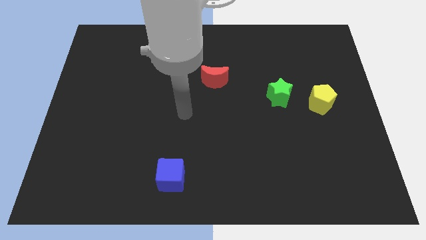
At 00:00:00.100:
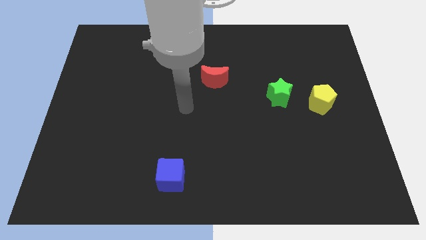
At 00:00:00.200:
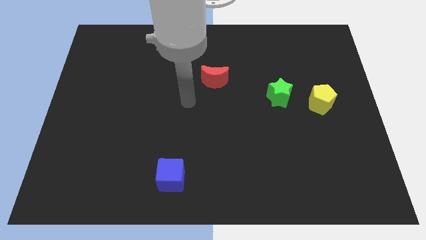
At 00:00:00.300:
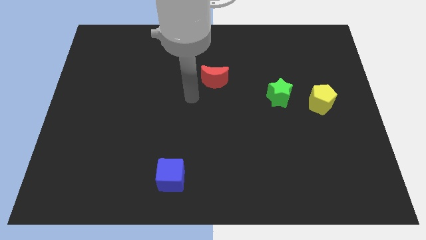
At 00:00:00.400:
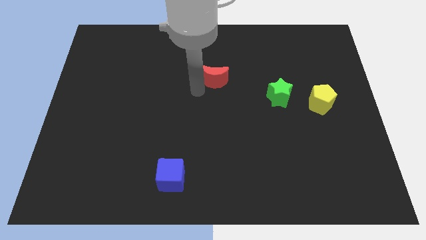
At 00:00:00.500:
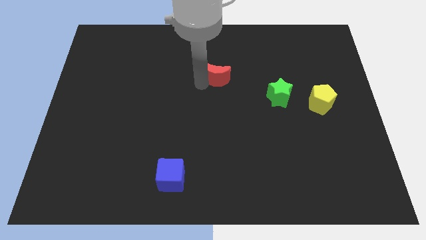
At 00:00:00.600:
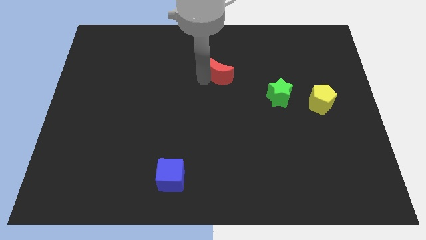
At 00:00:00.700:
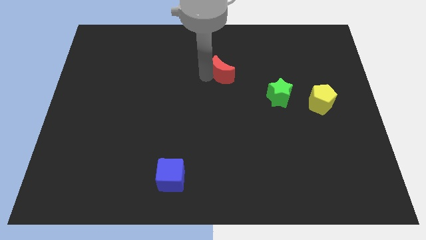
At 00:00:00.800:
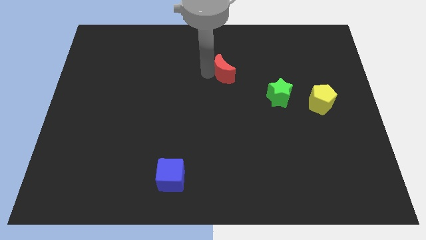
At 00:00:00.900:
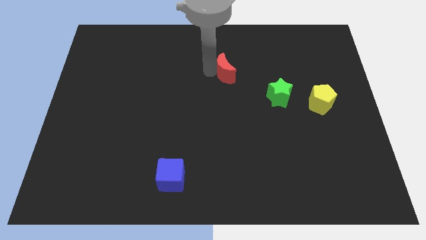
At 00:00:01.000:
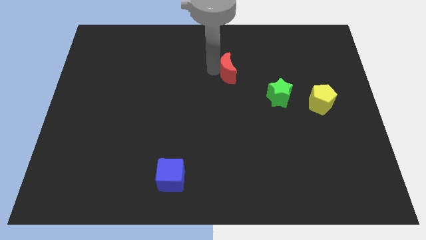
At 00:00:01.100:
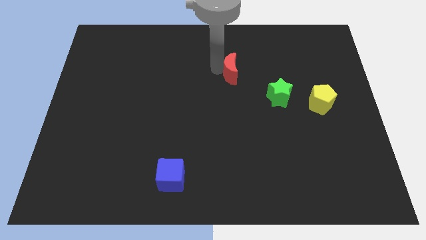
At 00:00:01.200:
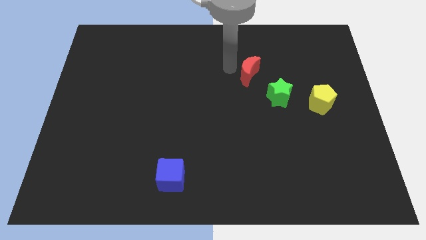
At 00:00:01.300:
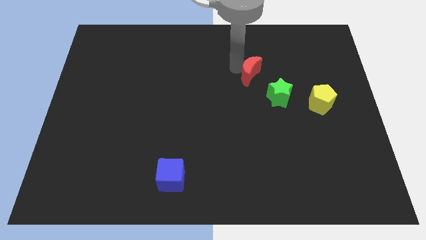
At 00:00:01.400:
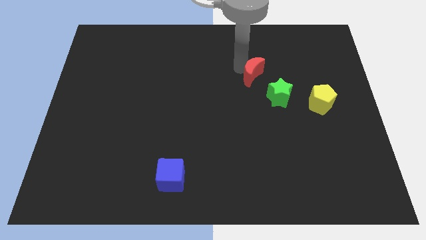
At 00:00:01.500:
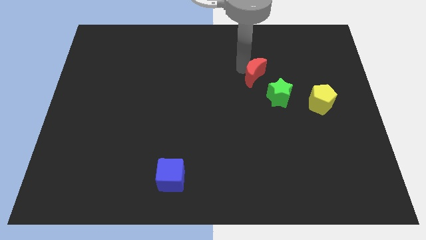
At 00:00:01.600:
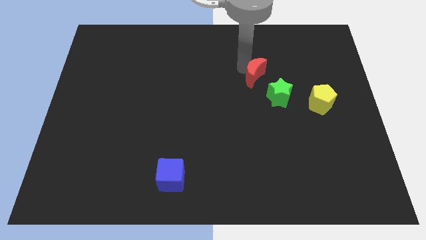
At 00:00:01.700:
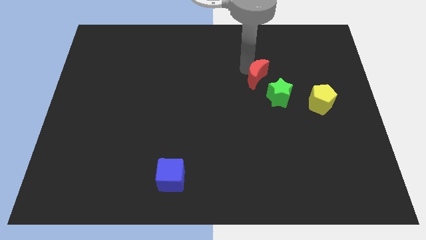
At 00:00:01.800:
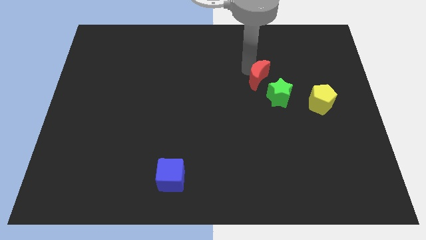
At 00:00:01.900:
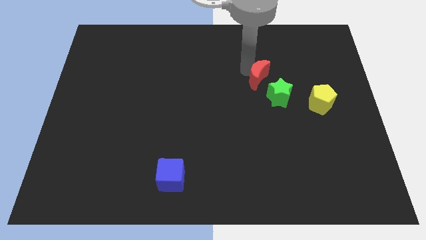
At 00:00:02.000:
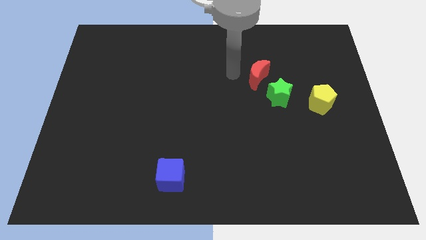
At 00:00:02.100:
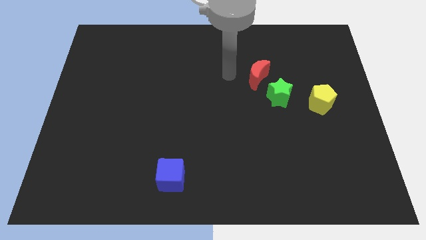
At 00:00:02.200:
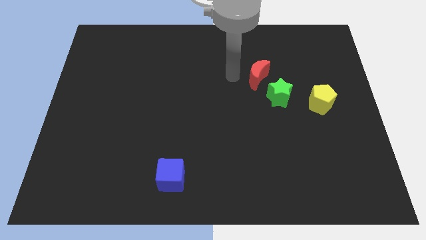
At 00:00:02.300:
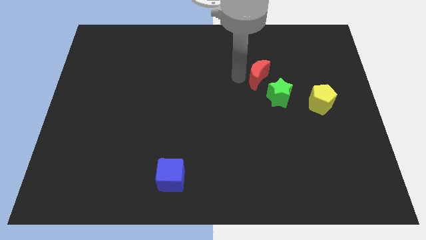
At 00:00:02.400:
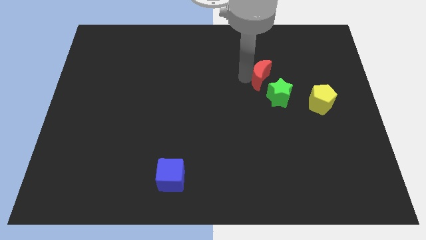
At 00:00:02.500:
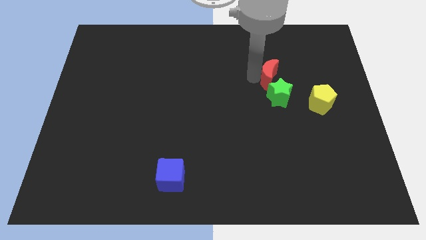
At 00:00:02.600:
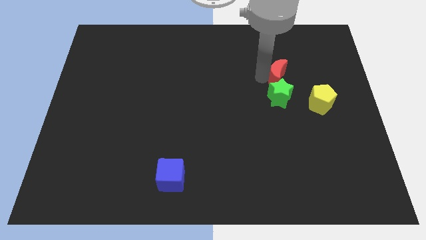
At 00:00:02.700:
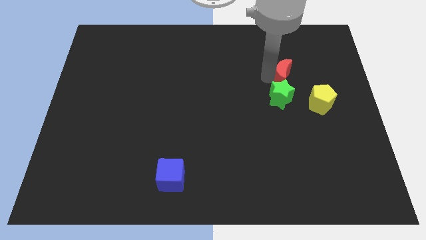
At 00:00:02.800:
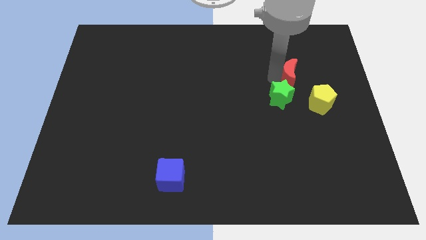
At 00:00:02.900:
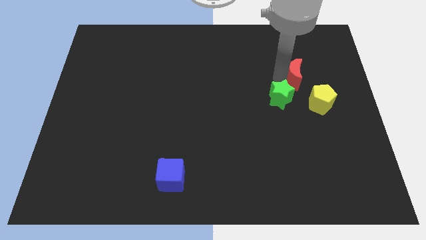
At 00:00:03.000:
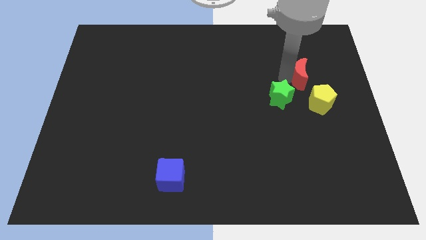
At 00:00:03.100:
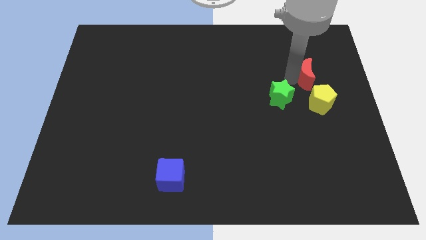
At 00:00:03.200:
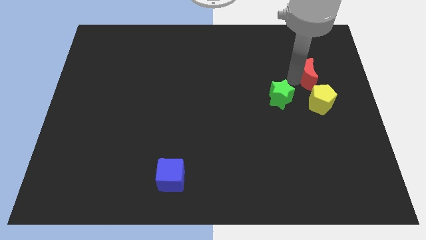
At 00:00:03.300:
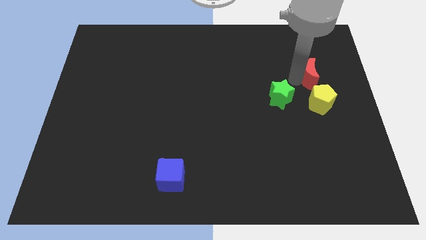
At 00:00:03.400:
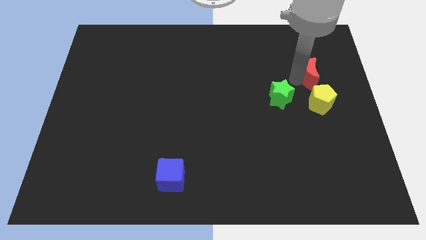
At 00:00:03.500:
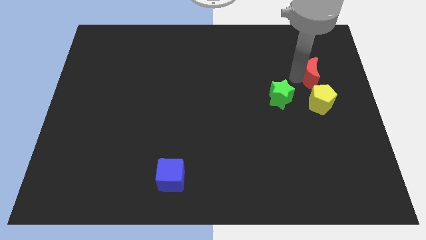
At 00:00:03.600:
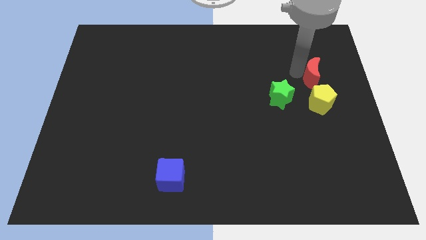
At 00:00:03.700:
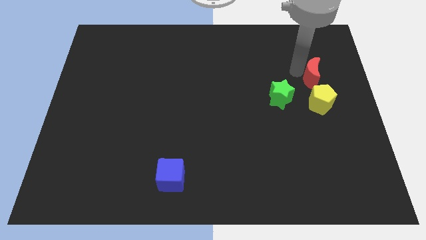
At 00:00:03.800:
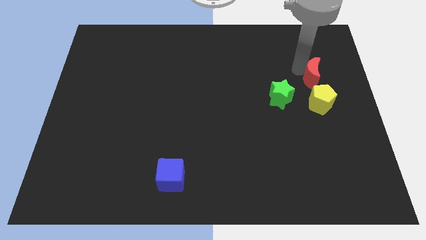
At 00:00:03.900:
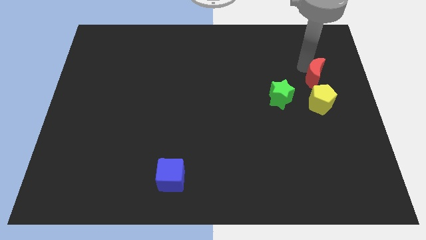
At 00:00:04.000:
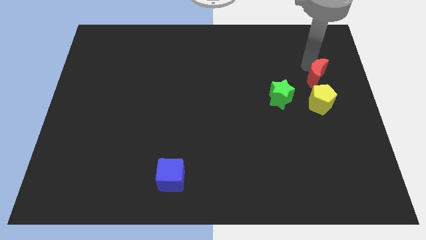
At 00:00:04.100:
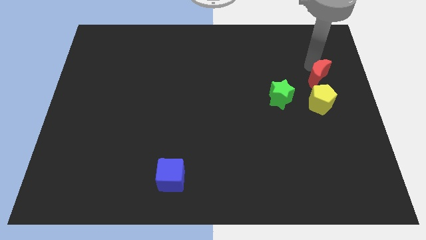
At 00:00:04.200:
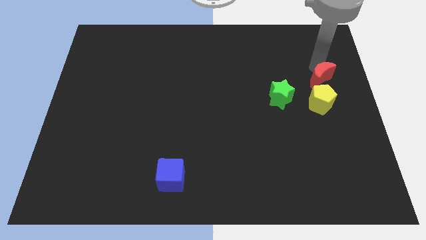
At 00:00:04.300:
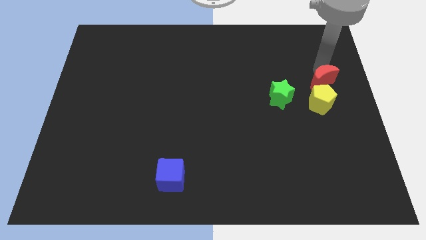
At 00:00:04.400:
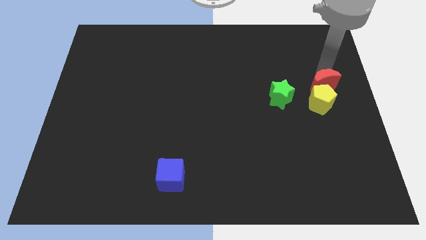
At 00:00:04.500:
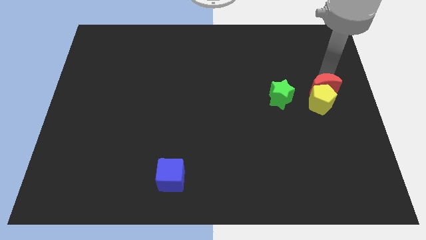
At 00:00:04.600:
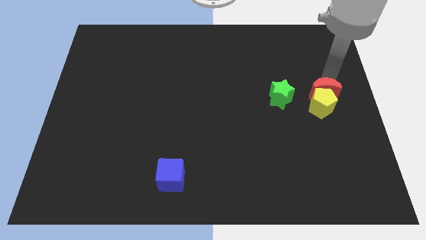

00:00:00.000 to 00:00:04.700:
push the moon towards the yellow pentagon

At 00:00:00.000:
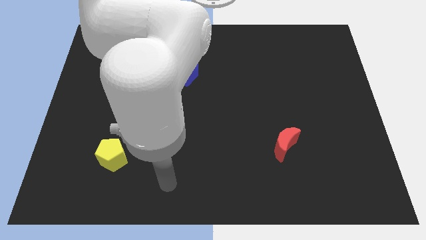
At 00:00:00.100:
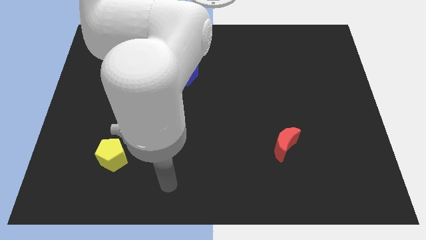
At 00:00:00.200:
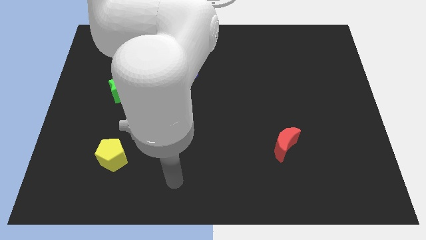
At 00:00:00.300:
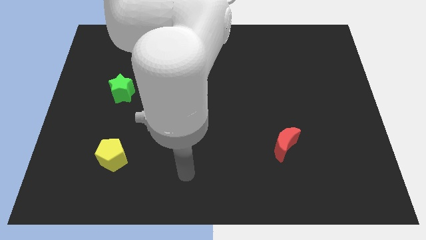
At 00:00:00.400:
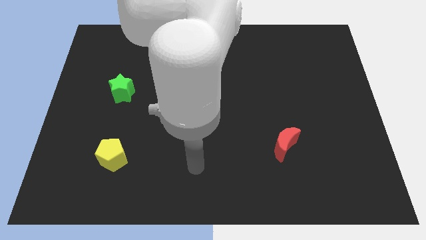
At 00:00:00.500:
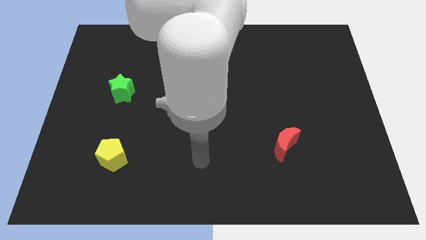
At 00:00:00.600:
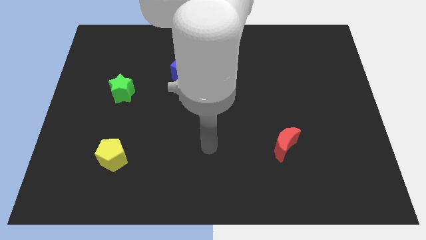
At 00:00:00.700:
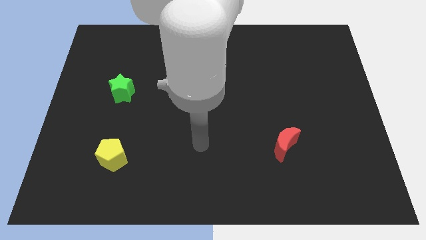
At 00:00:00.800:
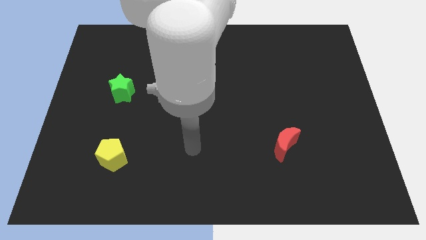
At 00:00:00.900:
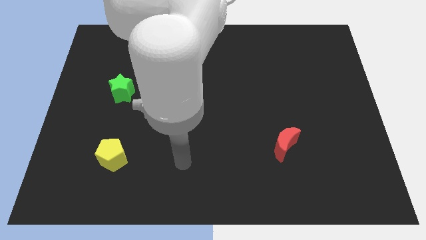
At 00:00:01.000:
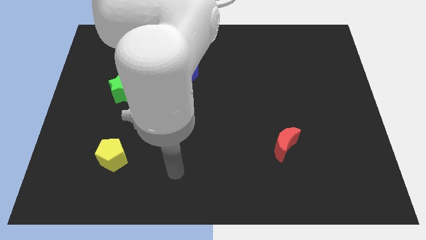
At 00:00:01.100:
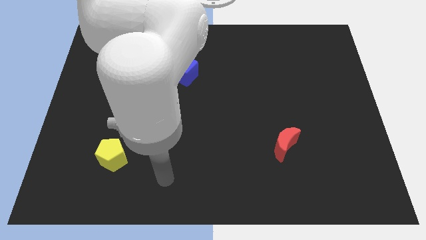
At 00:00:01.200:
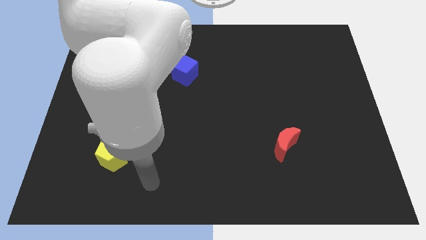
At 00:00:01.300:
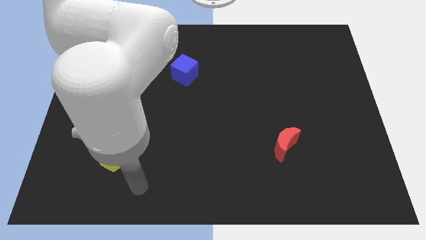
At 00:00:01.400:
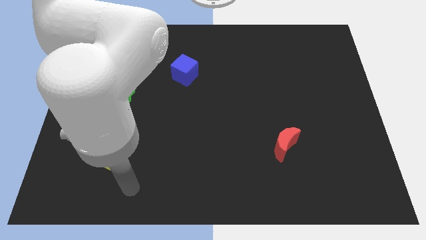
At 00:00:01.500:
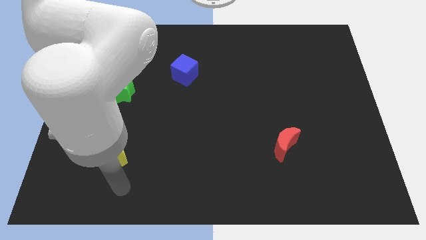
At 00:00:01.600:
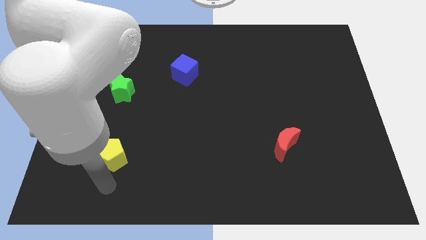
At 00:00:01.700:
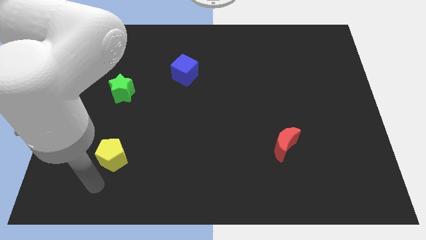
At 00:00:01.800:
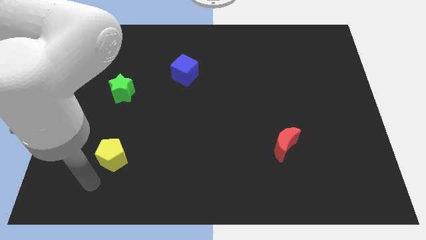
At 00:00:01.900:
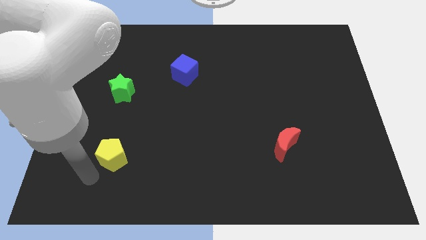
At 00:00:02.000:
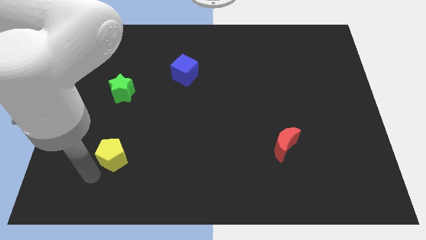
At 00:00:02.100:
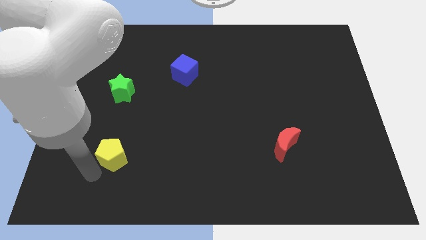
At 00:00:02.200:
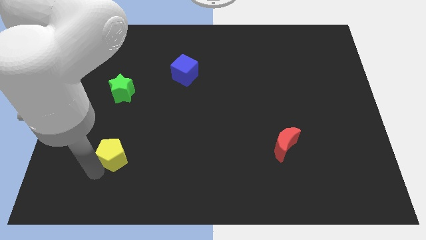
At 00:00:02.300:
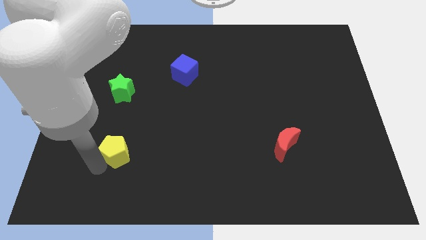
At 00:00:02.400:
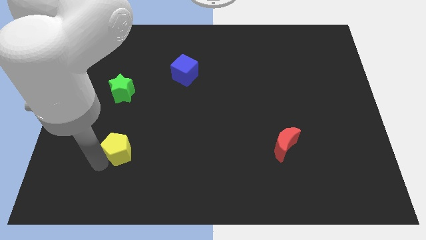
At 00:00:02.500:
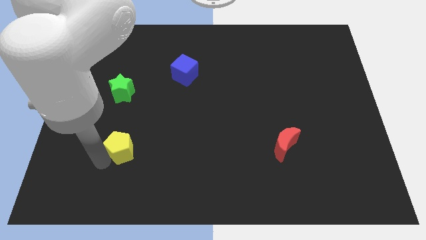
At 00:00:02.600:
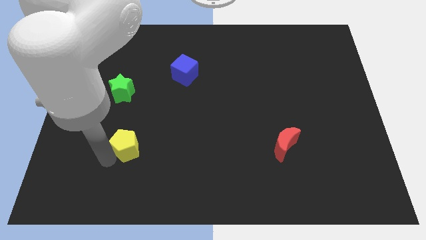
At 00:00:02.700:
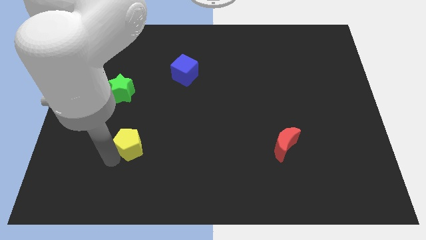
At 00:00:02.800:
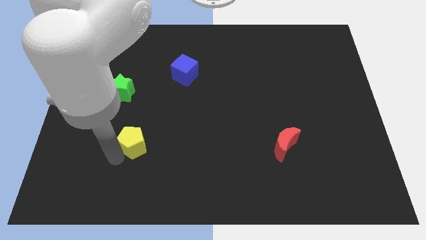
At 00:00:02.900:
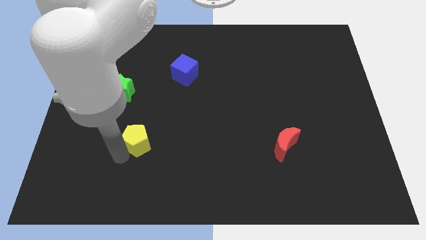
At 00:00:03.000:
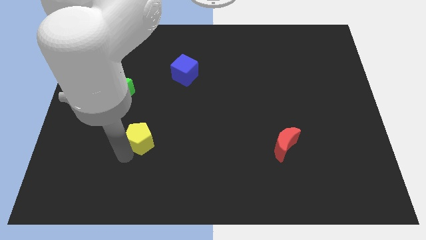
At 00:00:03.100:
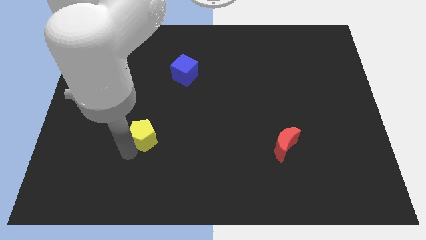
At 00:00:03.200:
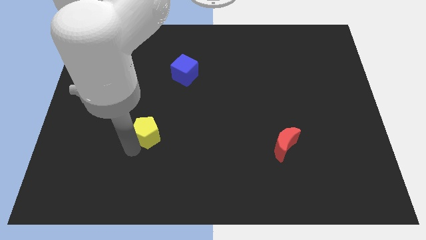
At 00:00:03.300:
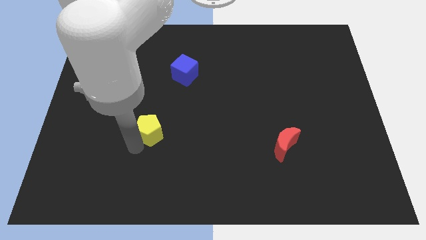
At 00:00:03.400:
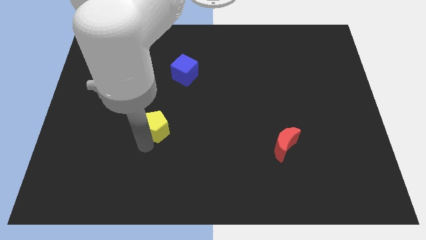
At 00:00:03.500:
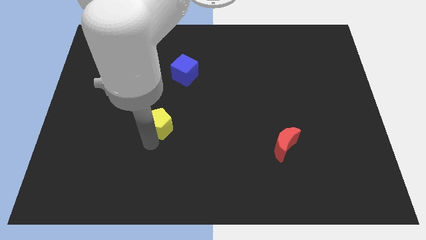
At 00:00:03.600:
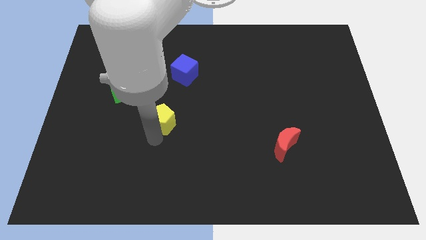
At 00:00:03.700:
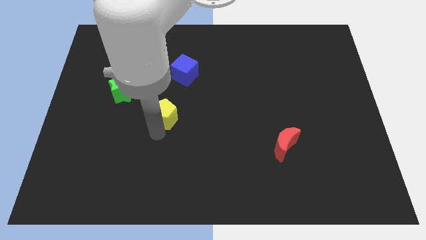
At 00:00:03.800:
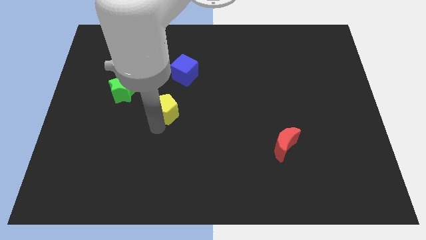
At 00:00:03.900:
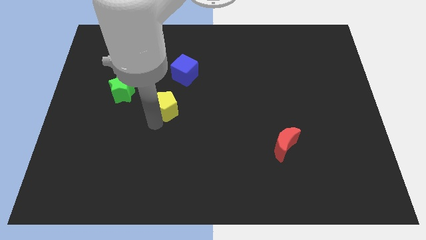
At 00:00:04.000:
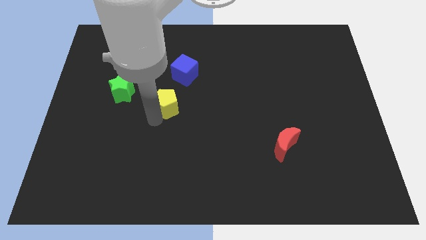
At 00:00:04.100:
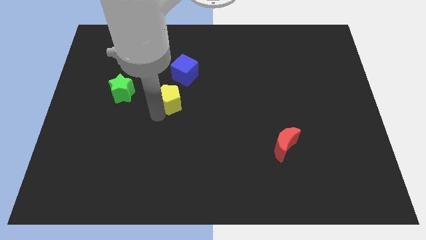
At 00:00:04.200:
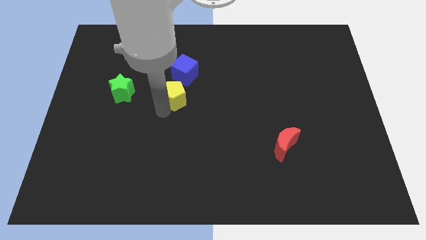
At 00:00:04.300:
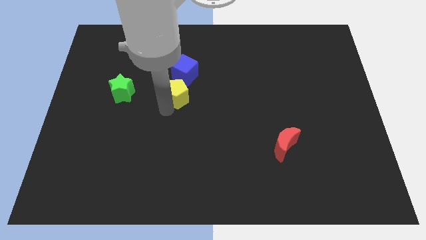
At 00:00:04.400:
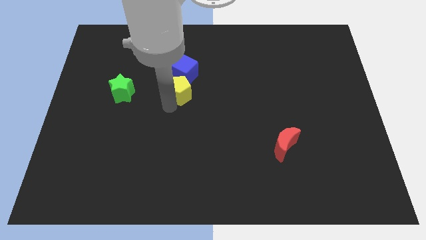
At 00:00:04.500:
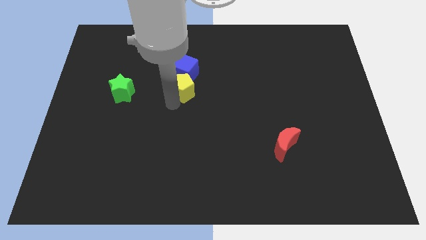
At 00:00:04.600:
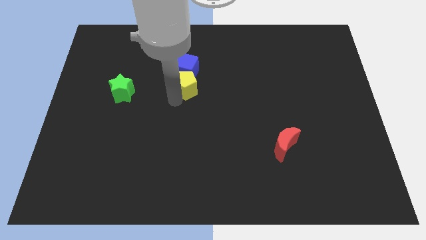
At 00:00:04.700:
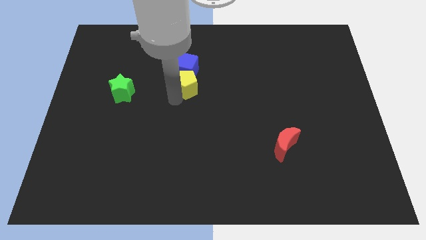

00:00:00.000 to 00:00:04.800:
push the yellow pentagon to the cube
